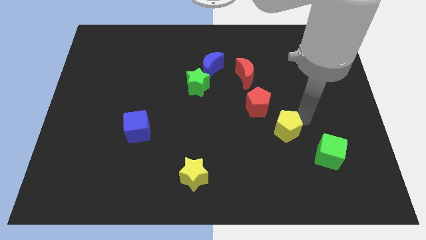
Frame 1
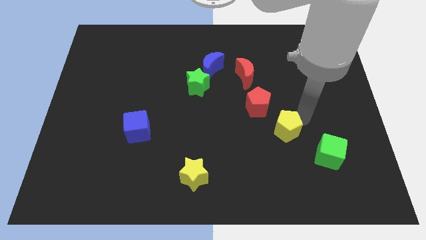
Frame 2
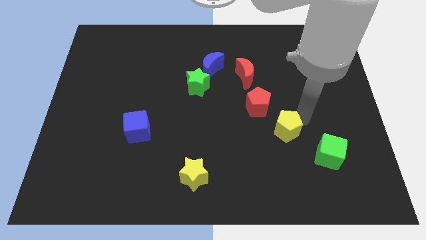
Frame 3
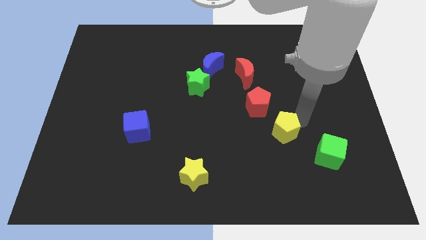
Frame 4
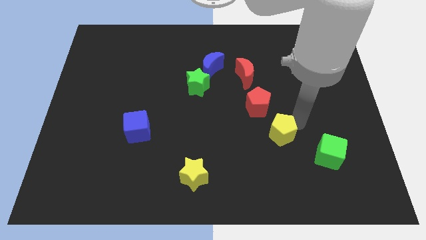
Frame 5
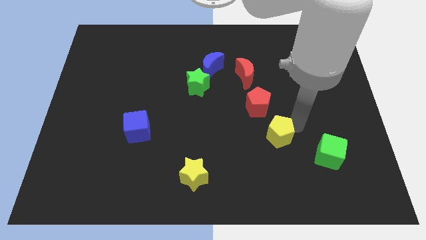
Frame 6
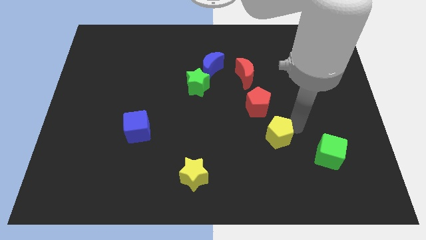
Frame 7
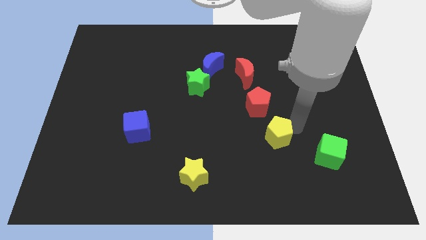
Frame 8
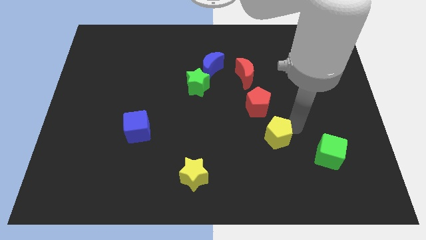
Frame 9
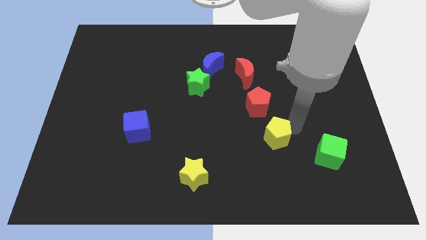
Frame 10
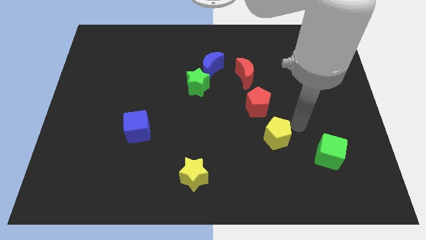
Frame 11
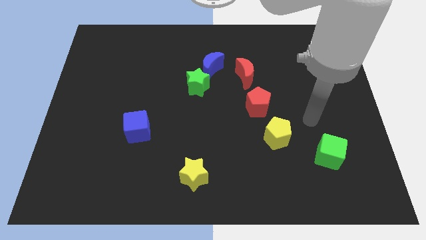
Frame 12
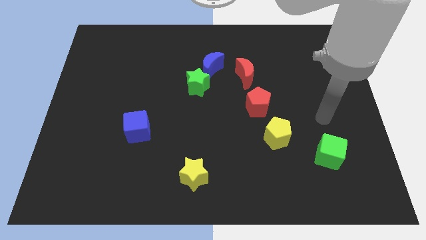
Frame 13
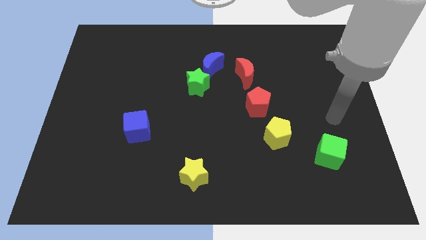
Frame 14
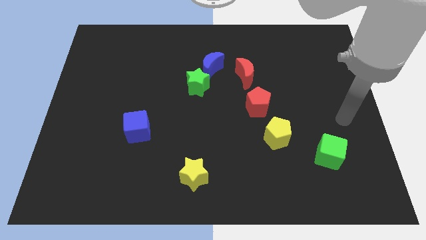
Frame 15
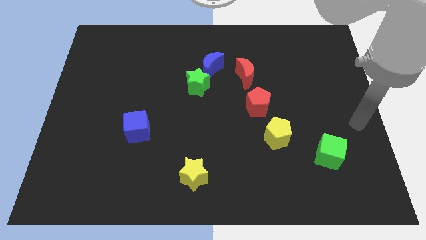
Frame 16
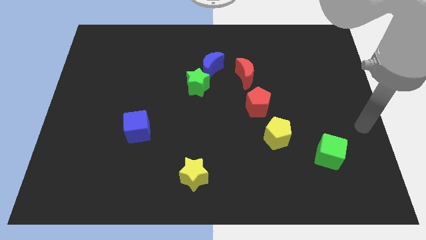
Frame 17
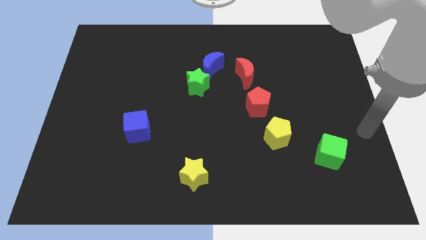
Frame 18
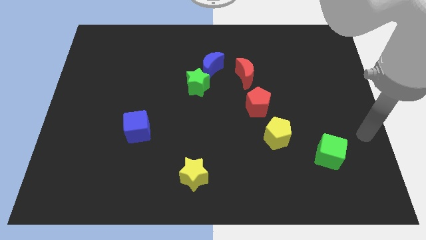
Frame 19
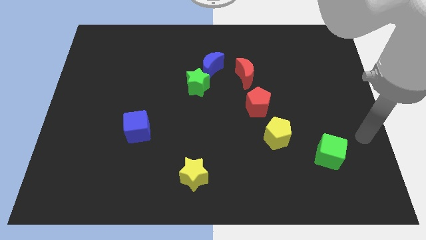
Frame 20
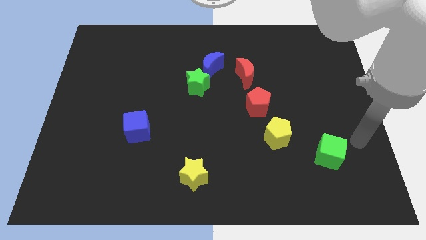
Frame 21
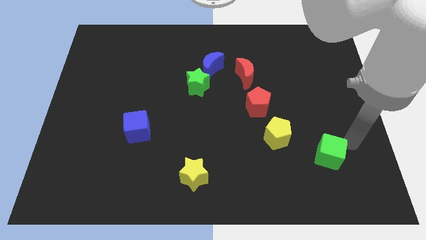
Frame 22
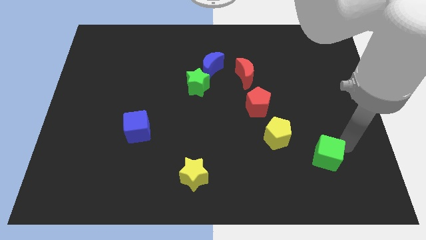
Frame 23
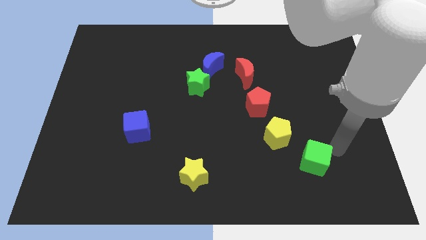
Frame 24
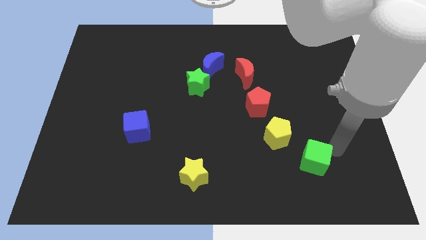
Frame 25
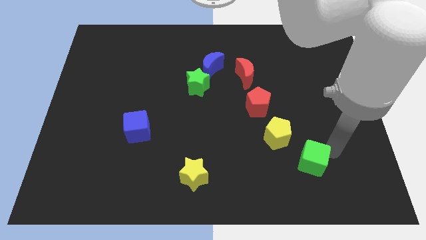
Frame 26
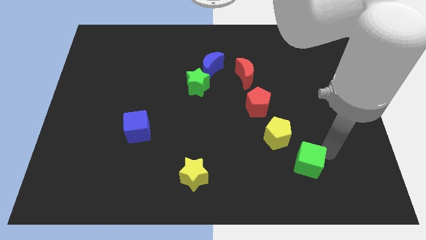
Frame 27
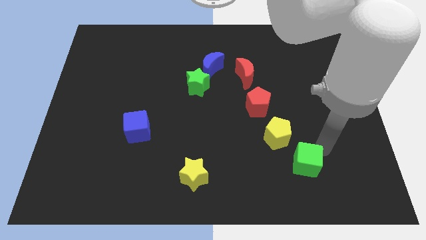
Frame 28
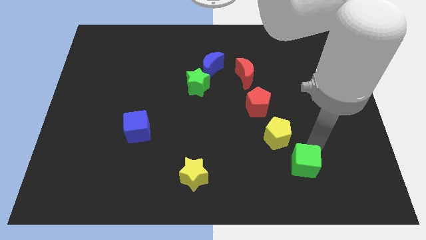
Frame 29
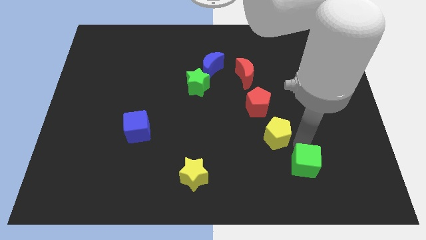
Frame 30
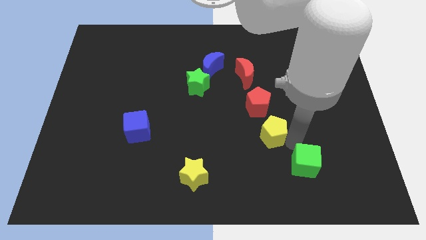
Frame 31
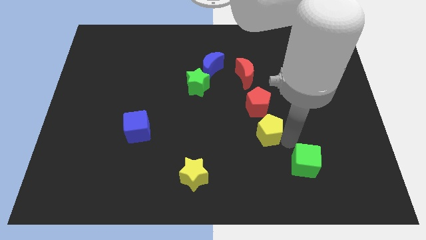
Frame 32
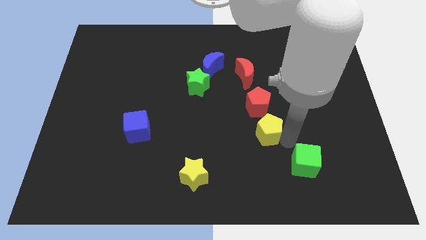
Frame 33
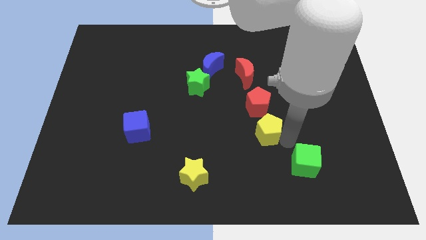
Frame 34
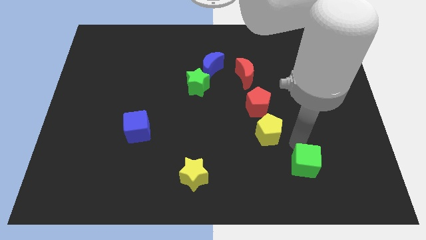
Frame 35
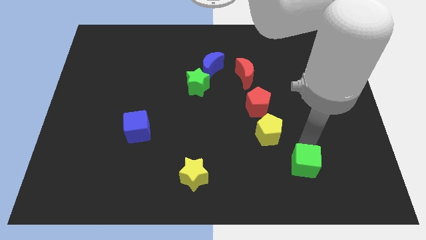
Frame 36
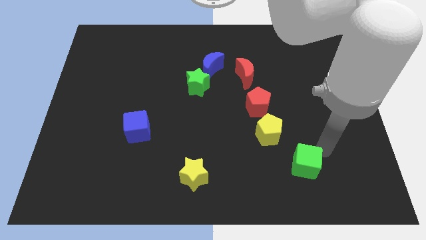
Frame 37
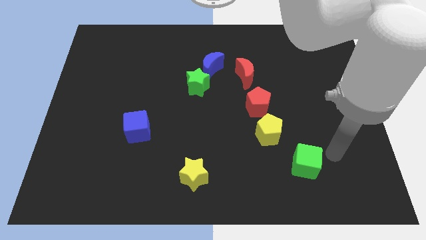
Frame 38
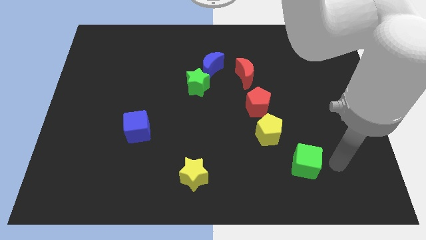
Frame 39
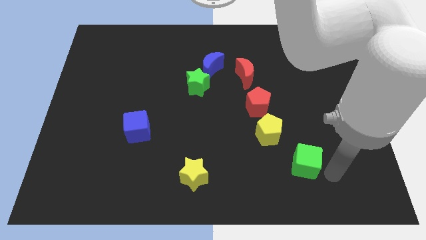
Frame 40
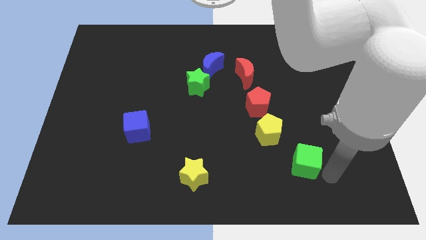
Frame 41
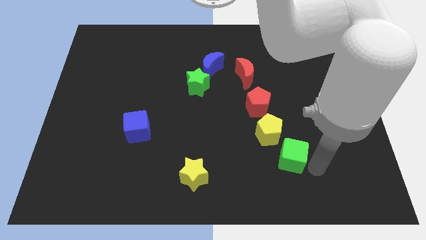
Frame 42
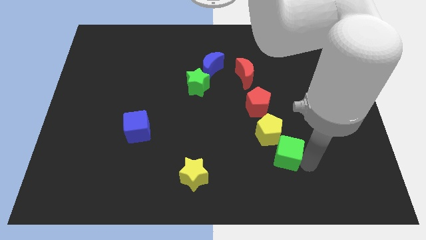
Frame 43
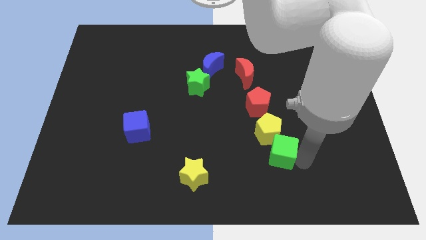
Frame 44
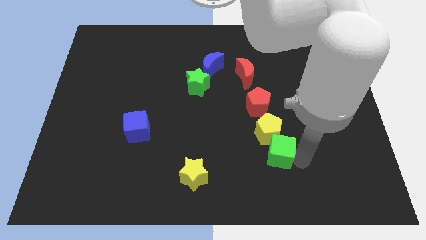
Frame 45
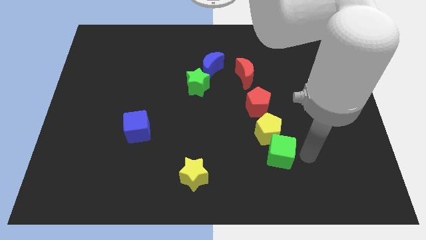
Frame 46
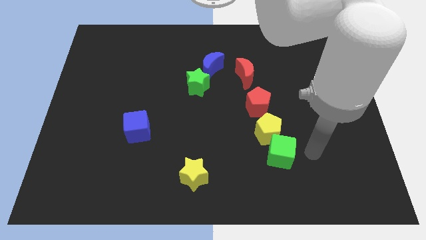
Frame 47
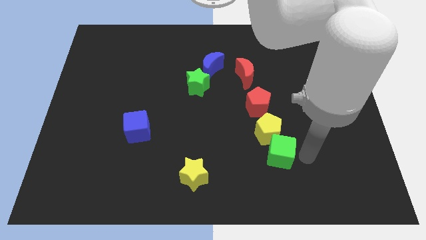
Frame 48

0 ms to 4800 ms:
move the yellow pentagon and green cube together at the bottom side of the red pentagon

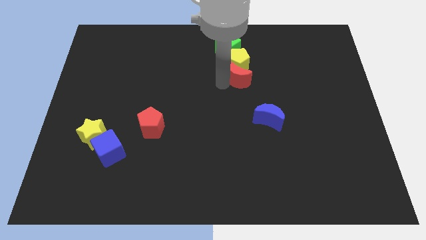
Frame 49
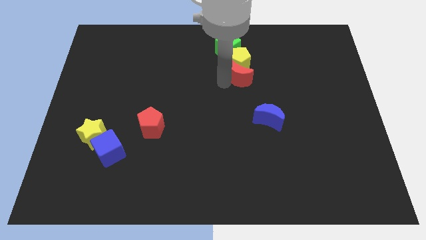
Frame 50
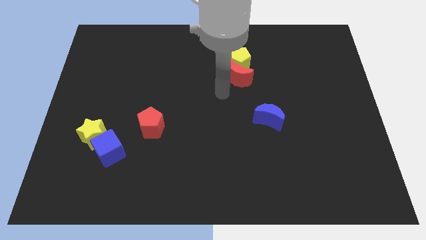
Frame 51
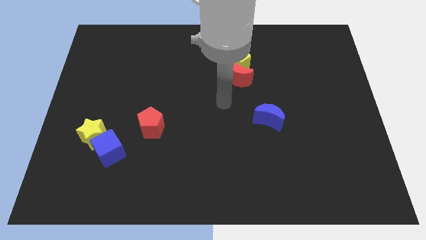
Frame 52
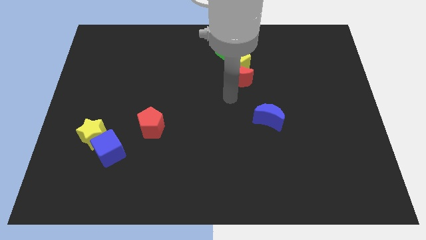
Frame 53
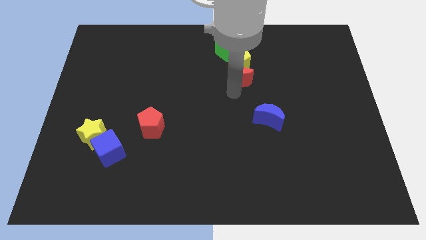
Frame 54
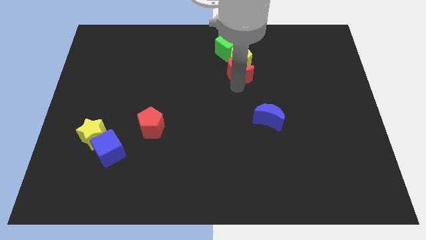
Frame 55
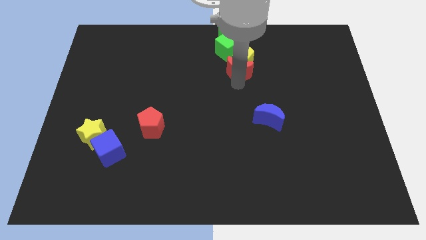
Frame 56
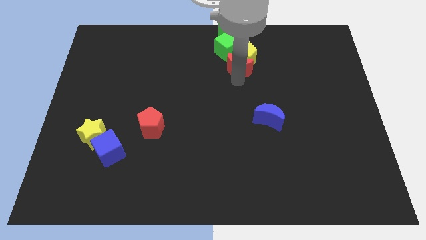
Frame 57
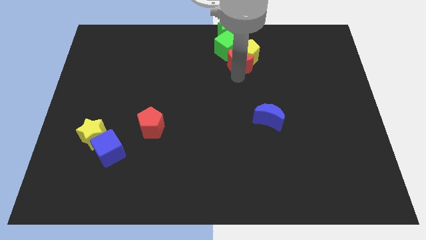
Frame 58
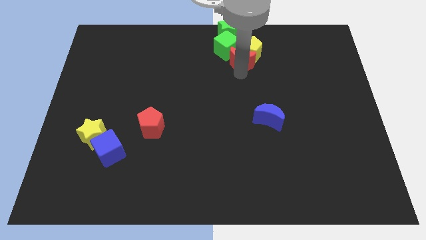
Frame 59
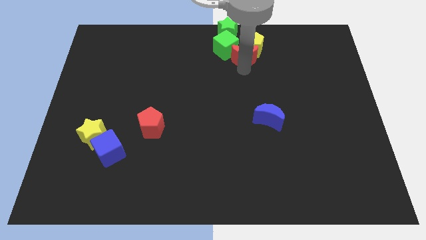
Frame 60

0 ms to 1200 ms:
push red moon and yellow pentagon in to green blocks

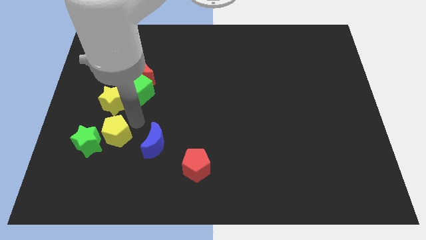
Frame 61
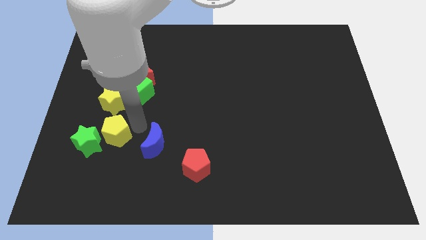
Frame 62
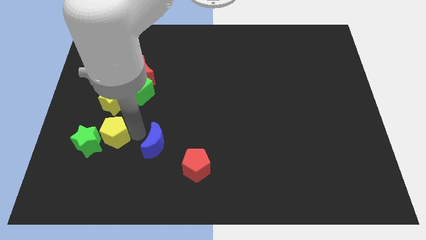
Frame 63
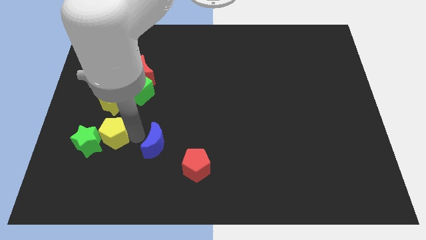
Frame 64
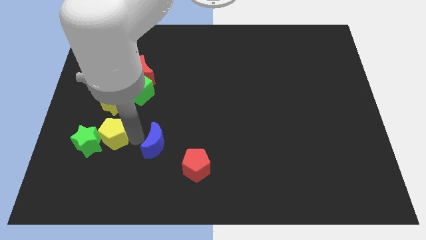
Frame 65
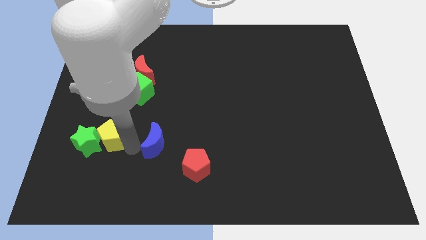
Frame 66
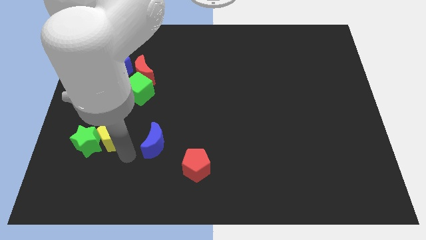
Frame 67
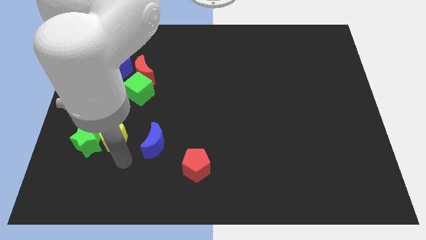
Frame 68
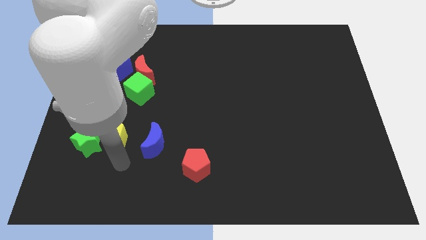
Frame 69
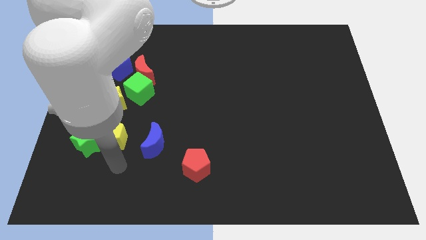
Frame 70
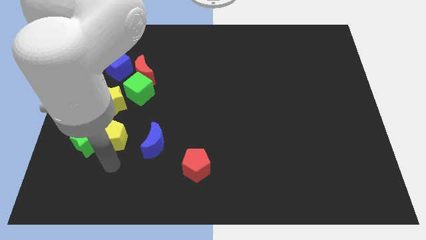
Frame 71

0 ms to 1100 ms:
push the yellow pentagon into the green star

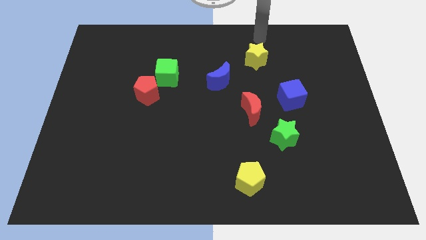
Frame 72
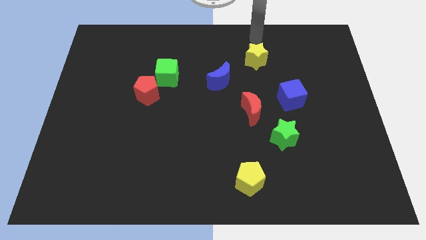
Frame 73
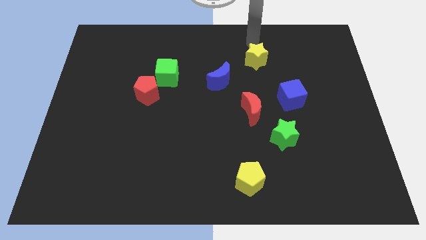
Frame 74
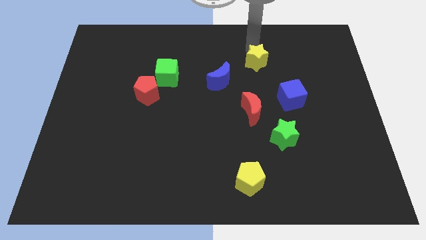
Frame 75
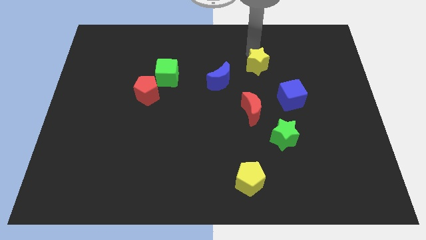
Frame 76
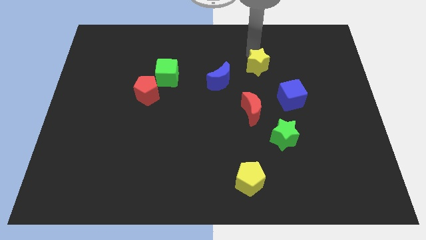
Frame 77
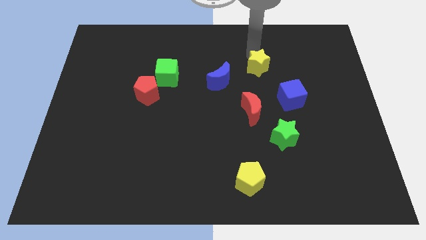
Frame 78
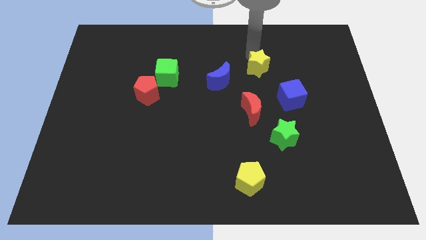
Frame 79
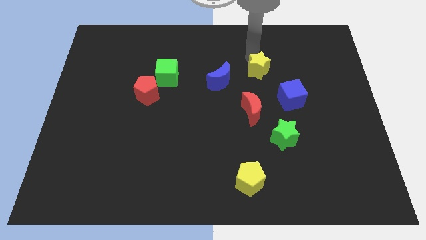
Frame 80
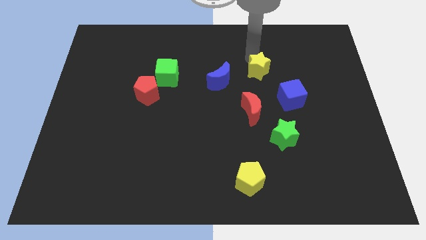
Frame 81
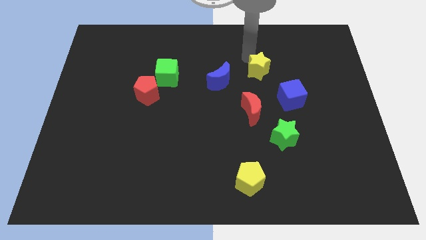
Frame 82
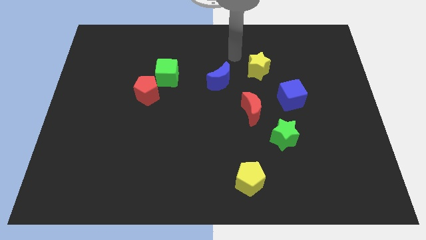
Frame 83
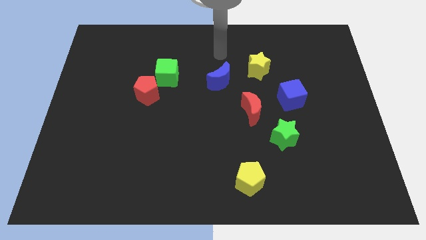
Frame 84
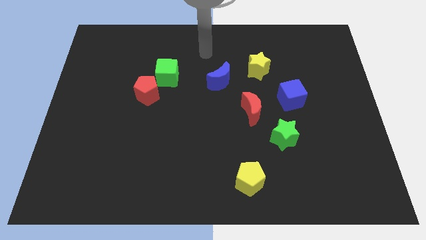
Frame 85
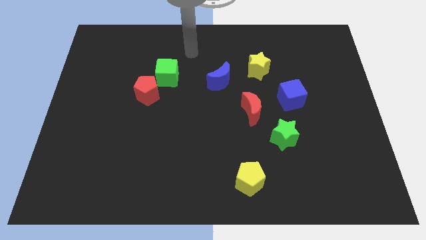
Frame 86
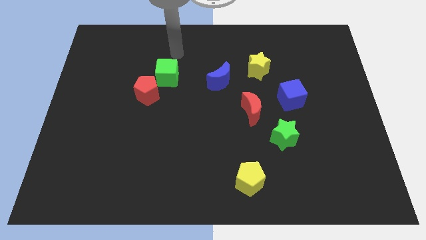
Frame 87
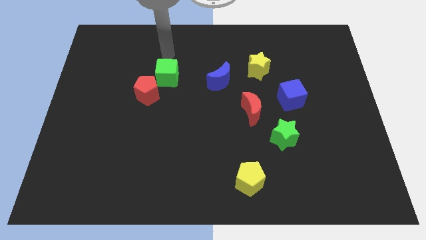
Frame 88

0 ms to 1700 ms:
place yellow star to the right of blue moon

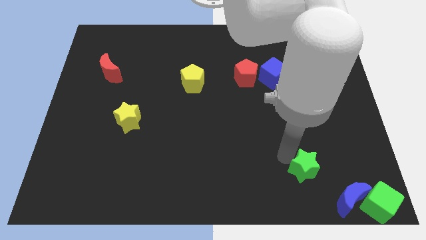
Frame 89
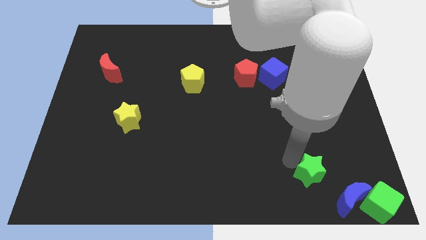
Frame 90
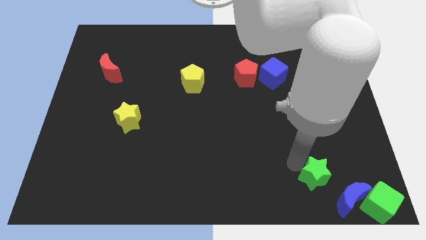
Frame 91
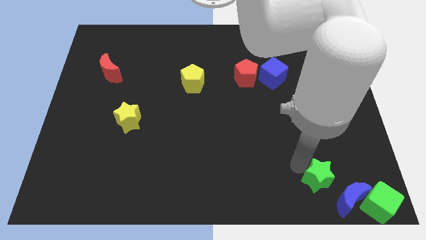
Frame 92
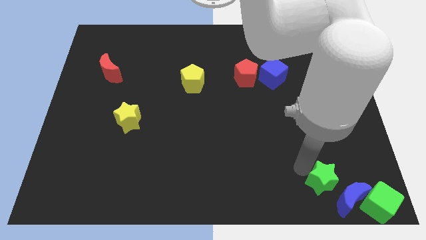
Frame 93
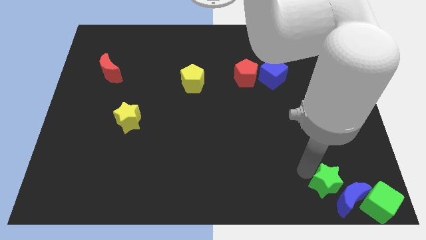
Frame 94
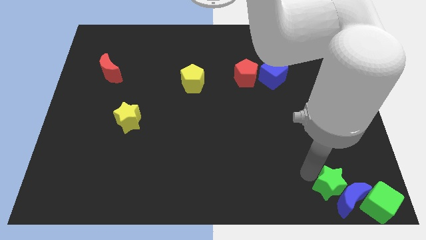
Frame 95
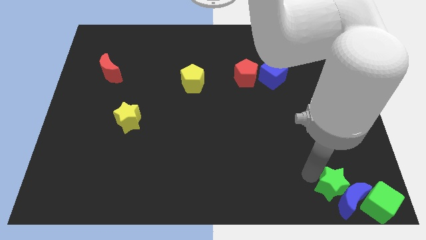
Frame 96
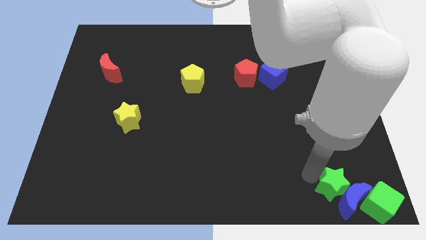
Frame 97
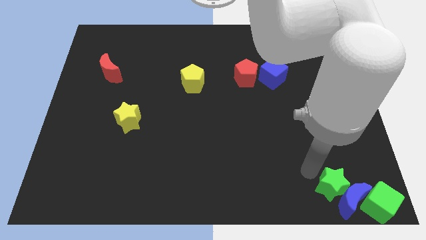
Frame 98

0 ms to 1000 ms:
move green star to the bottom right corner of the board
